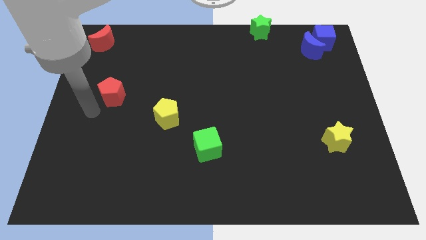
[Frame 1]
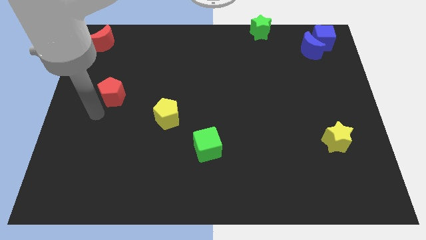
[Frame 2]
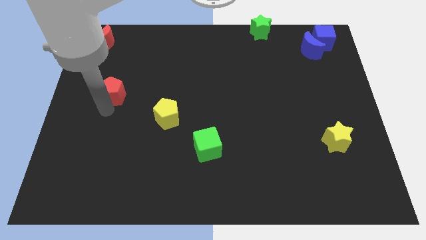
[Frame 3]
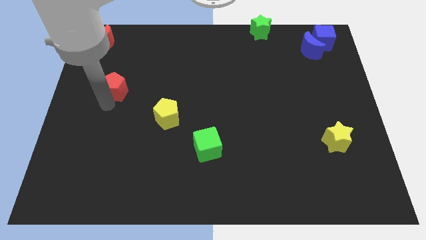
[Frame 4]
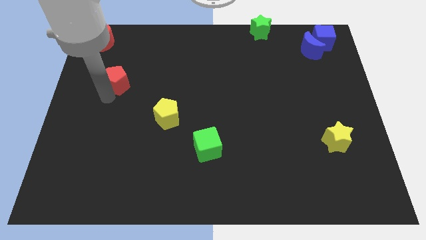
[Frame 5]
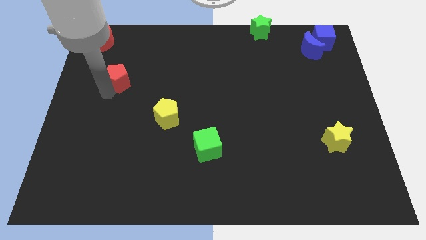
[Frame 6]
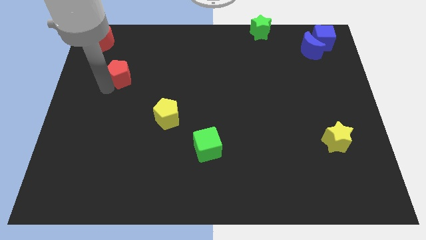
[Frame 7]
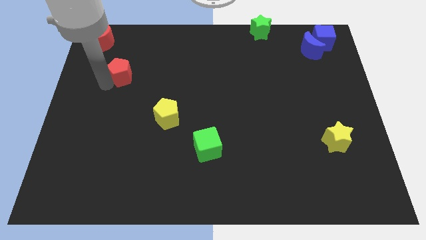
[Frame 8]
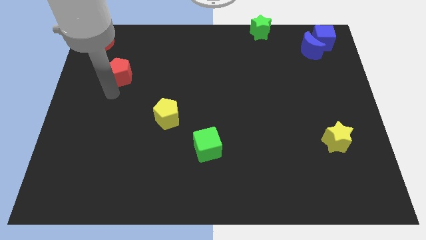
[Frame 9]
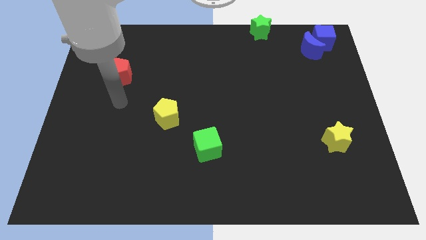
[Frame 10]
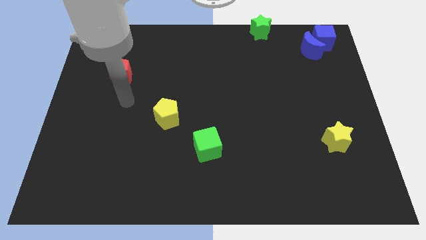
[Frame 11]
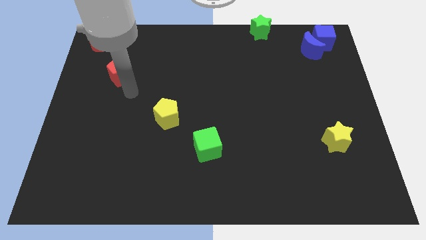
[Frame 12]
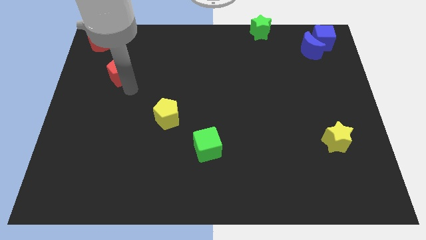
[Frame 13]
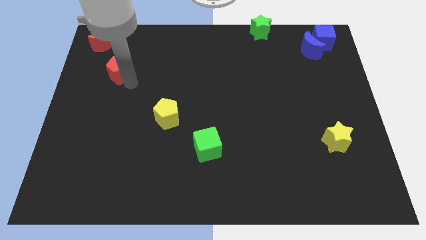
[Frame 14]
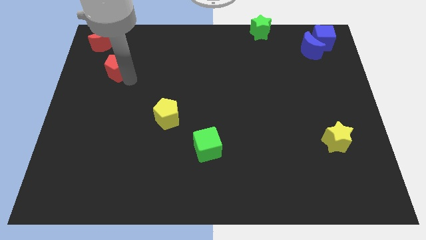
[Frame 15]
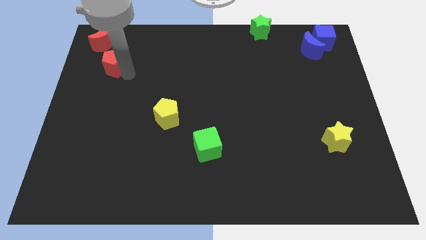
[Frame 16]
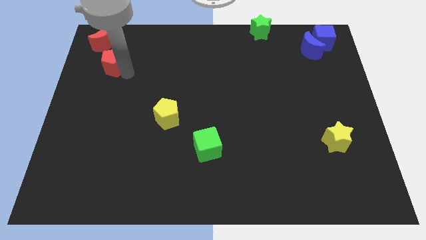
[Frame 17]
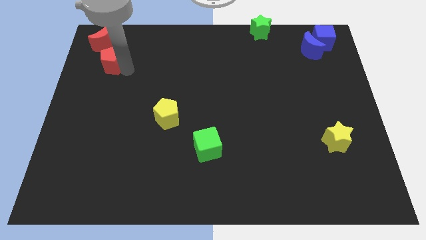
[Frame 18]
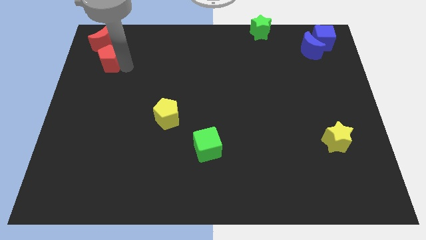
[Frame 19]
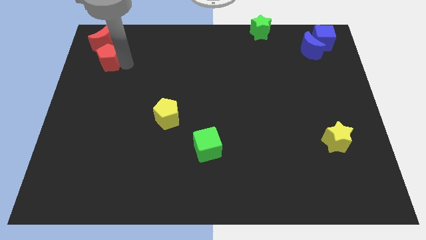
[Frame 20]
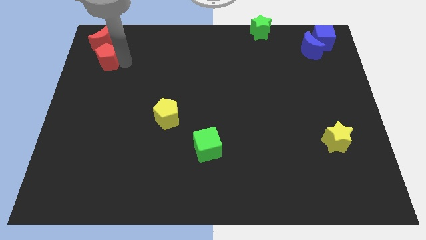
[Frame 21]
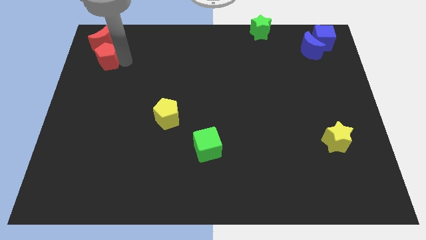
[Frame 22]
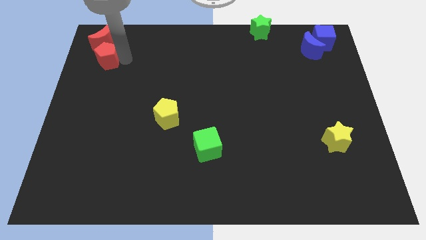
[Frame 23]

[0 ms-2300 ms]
push the red pentagon into the red crescent

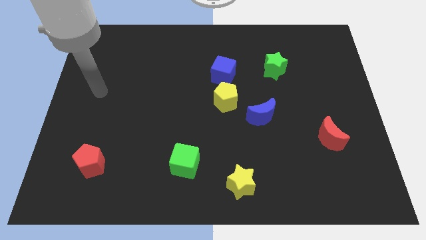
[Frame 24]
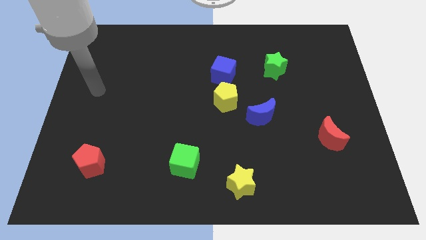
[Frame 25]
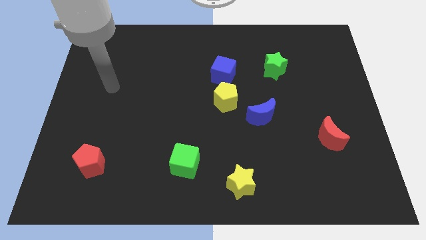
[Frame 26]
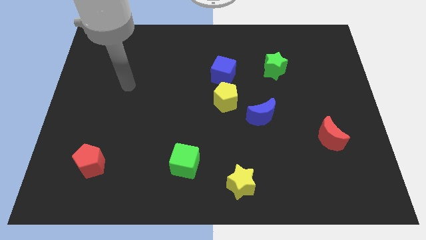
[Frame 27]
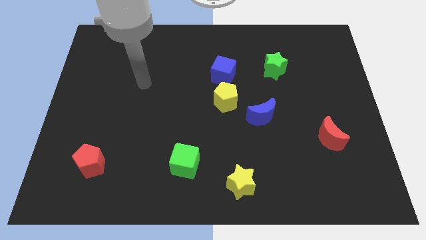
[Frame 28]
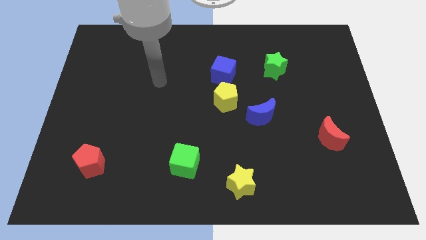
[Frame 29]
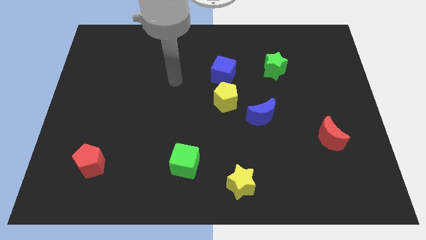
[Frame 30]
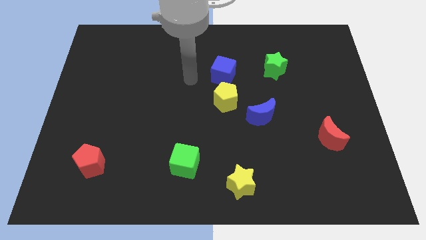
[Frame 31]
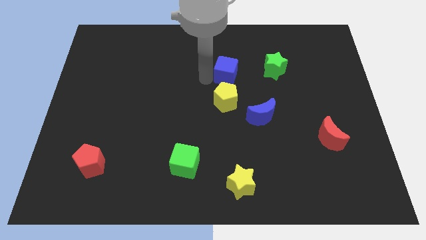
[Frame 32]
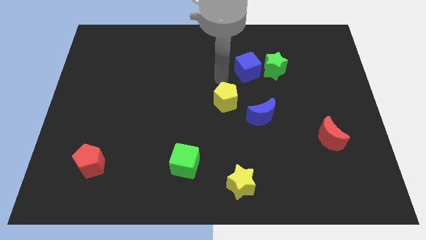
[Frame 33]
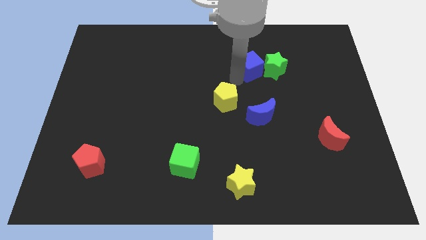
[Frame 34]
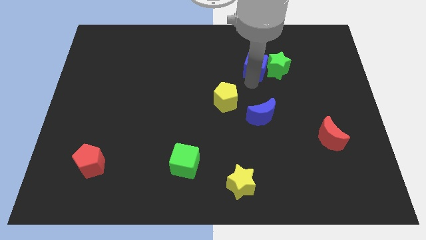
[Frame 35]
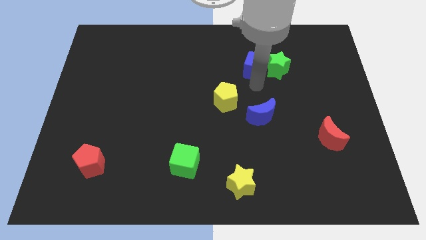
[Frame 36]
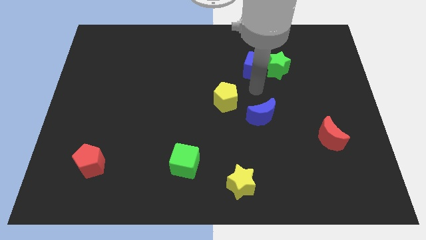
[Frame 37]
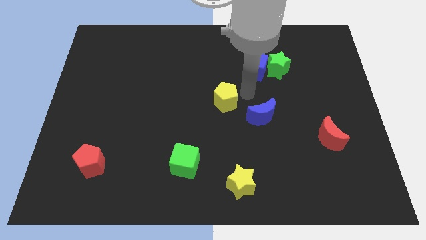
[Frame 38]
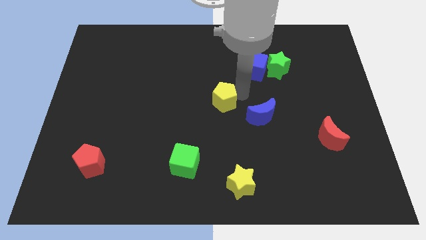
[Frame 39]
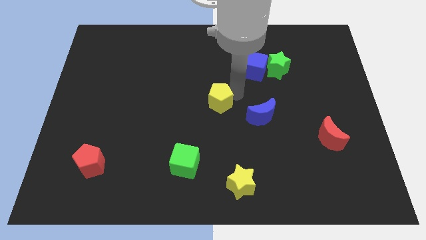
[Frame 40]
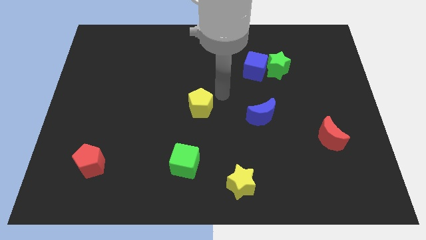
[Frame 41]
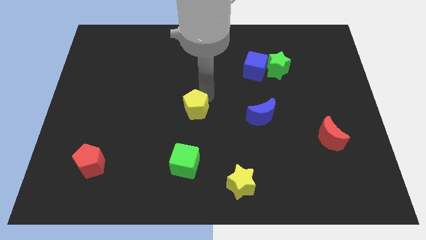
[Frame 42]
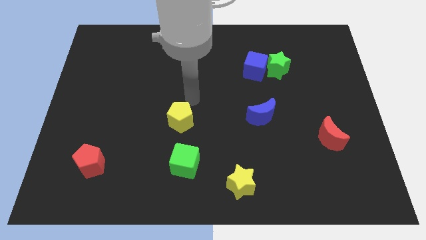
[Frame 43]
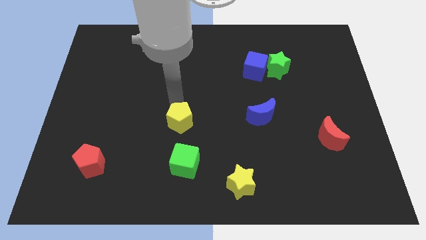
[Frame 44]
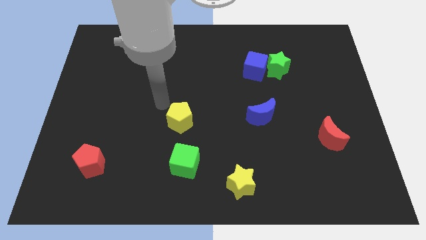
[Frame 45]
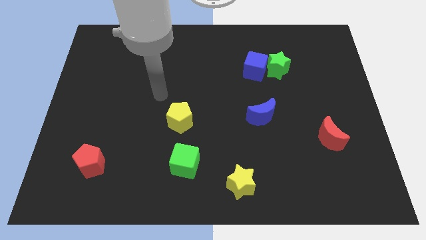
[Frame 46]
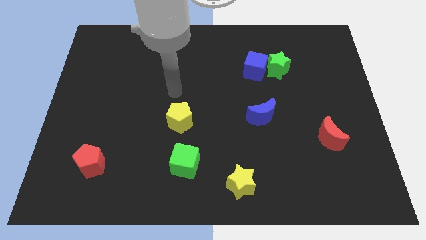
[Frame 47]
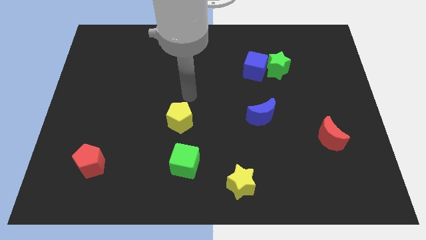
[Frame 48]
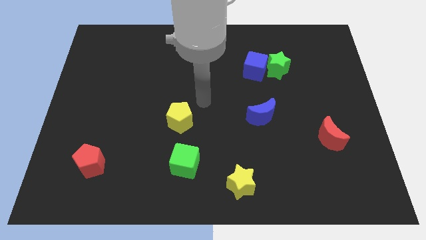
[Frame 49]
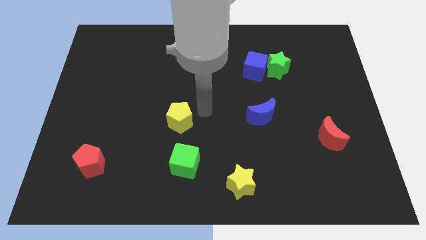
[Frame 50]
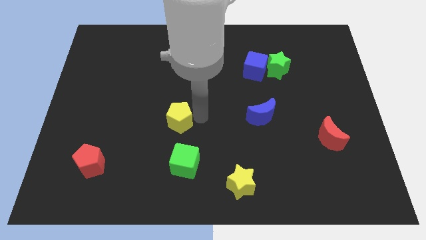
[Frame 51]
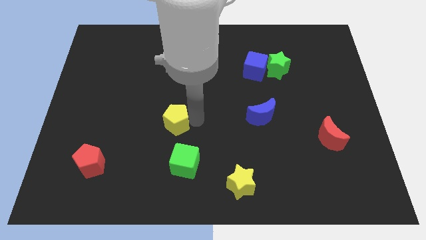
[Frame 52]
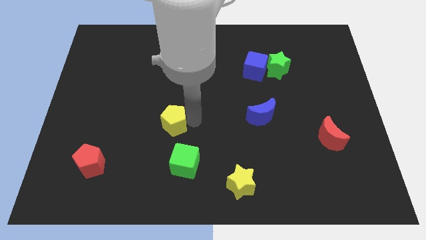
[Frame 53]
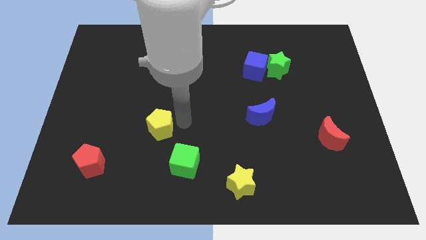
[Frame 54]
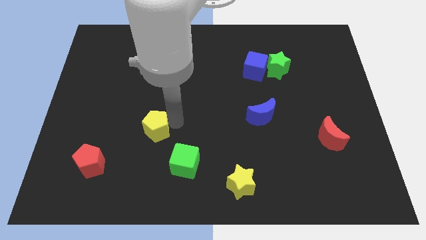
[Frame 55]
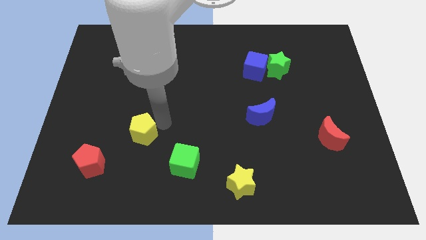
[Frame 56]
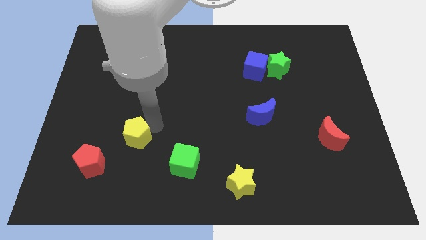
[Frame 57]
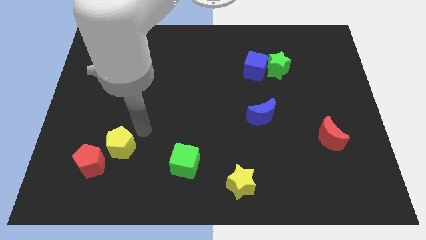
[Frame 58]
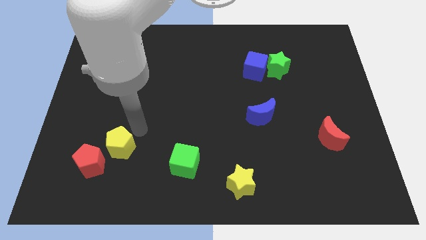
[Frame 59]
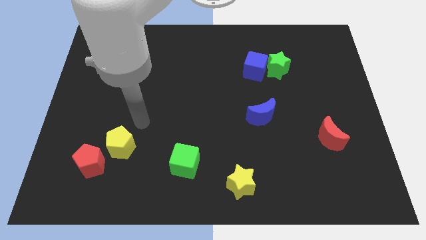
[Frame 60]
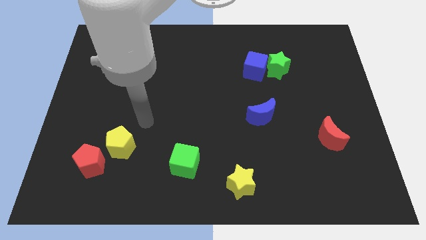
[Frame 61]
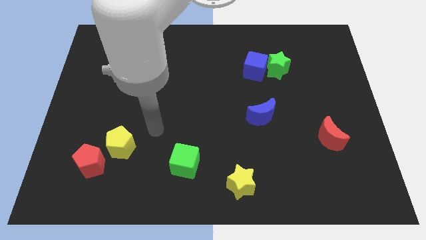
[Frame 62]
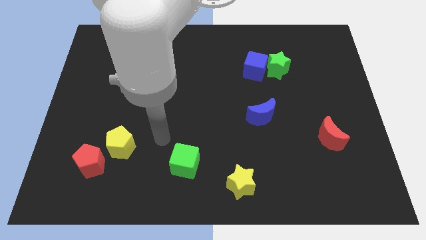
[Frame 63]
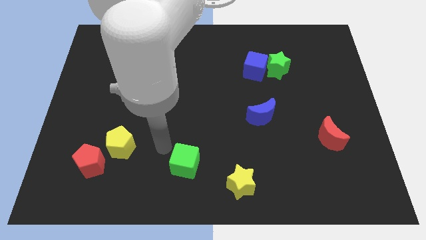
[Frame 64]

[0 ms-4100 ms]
place yellow pentagon next to red pentagon

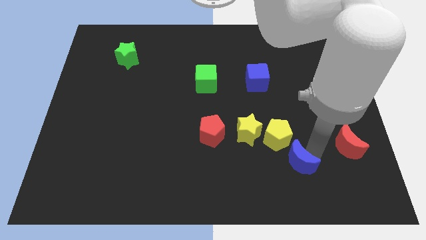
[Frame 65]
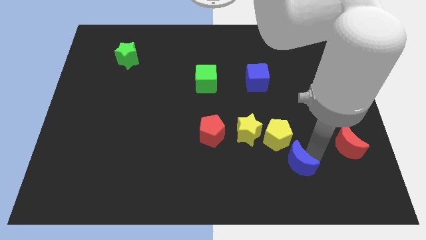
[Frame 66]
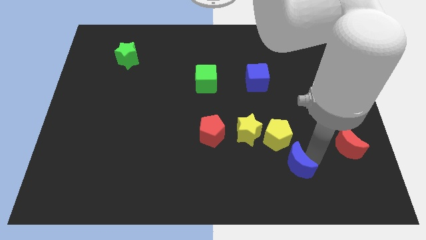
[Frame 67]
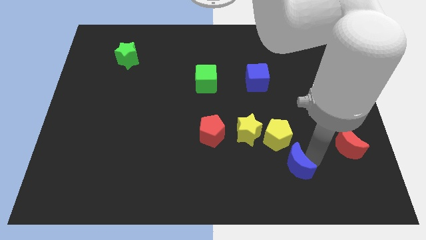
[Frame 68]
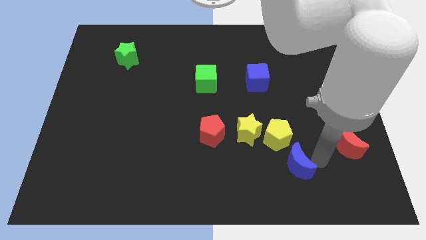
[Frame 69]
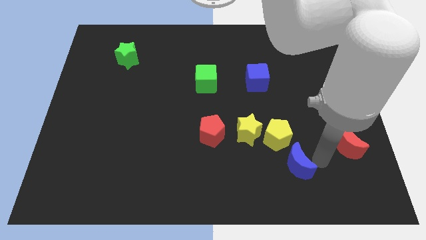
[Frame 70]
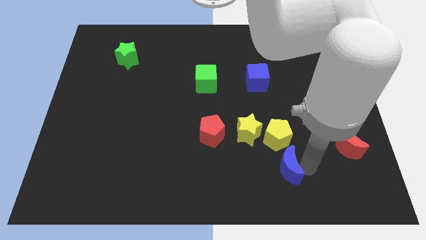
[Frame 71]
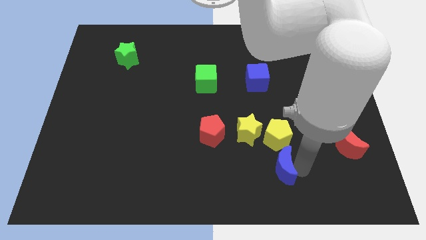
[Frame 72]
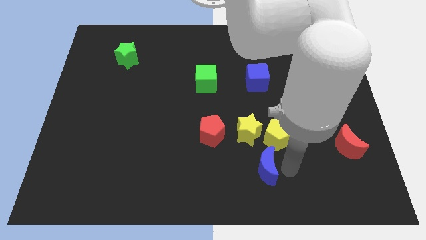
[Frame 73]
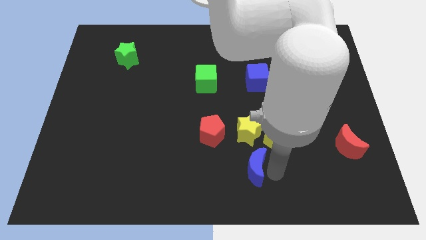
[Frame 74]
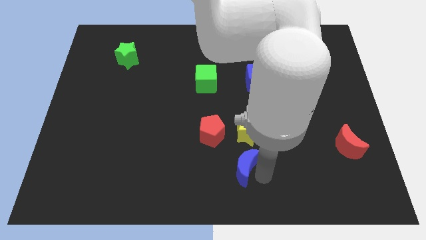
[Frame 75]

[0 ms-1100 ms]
push the blue moon below the yellow star

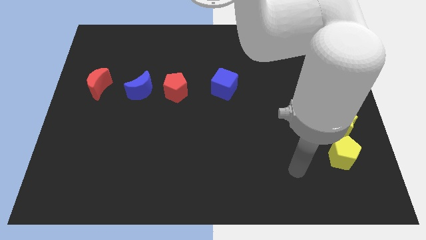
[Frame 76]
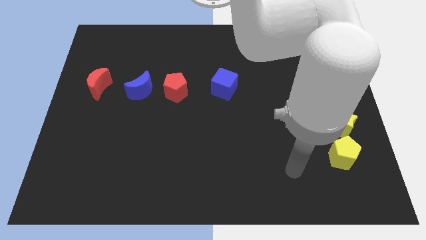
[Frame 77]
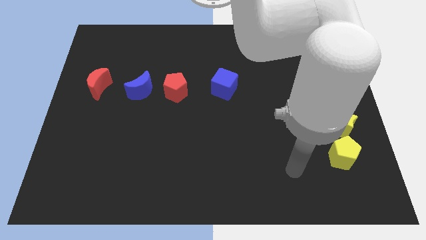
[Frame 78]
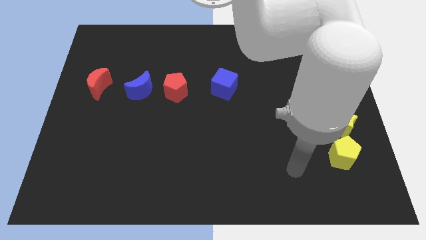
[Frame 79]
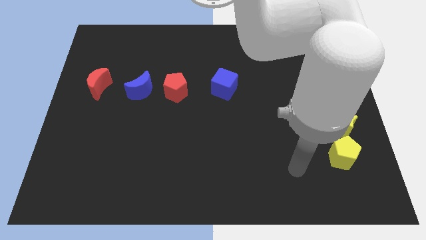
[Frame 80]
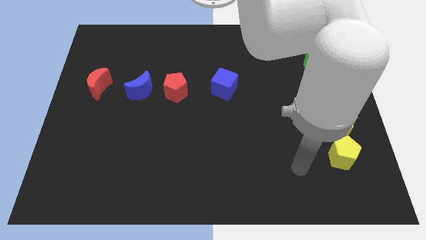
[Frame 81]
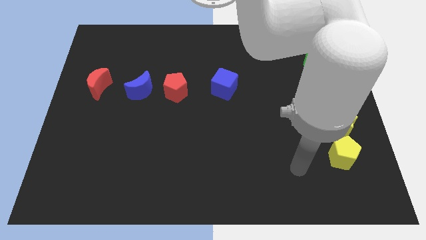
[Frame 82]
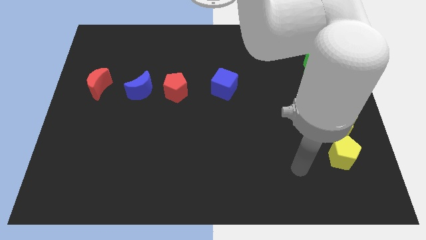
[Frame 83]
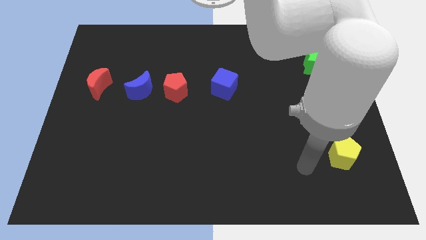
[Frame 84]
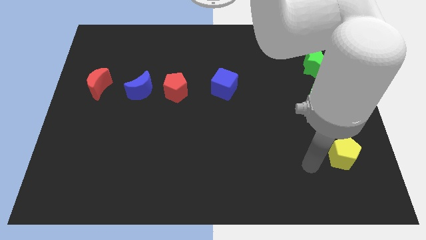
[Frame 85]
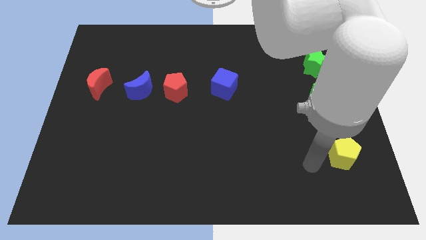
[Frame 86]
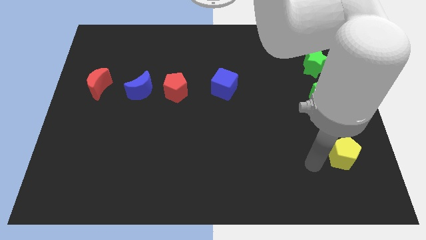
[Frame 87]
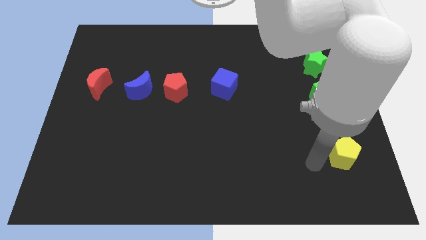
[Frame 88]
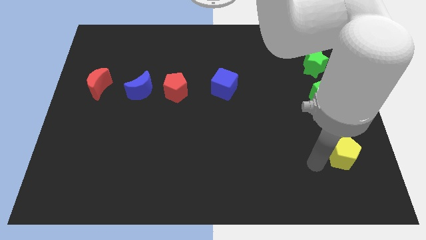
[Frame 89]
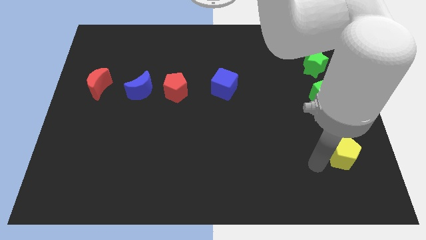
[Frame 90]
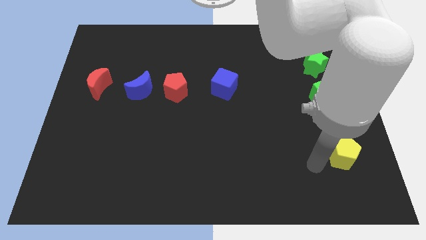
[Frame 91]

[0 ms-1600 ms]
move your arm to the yellow pentagon
